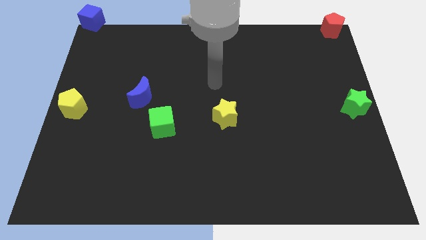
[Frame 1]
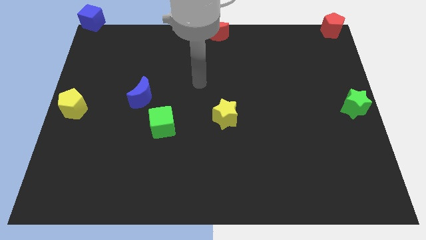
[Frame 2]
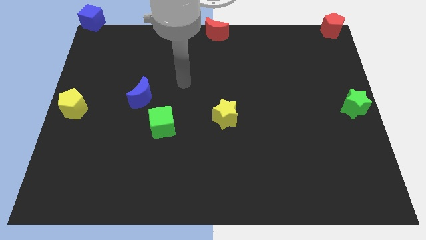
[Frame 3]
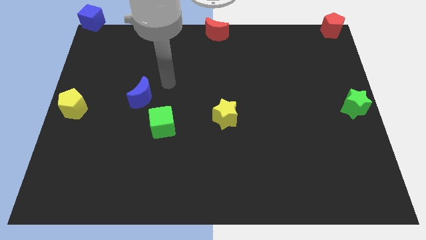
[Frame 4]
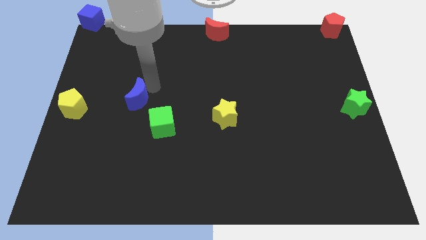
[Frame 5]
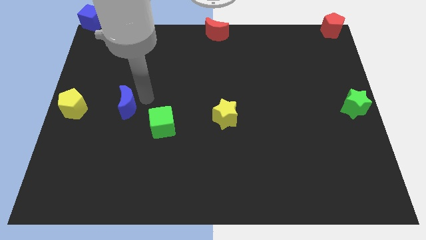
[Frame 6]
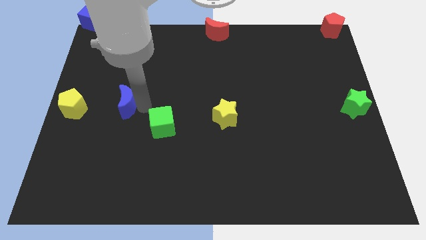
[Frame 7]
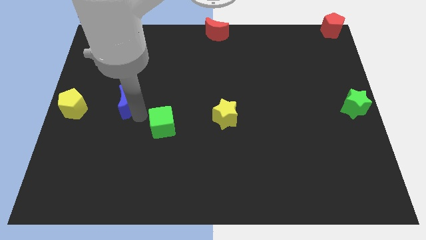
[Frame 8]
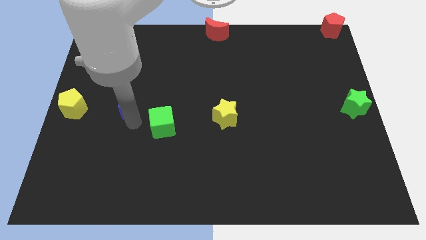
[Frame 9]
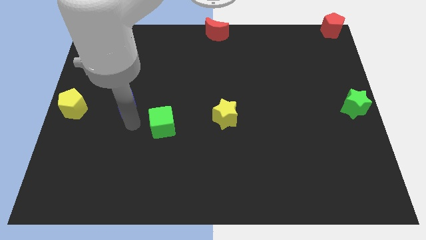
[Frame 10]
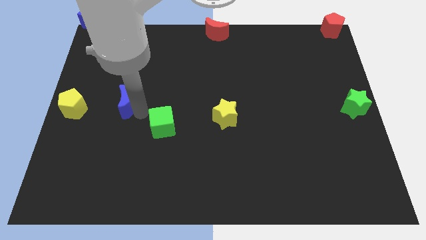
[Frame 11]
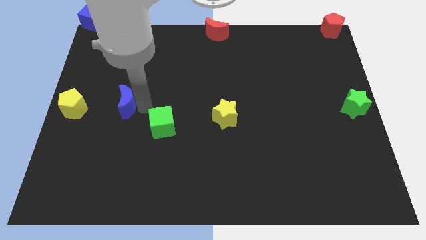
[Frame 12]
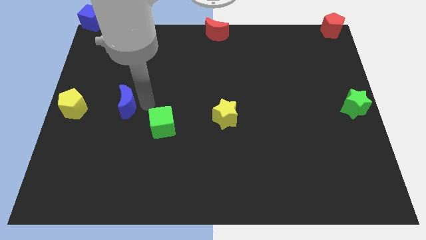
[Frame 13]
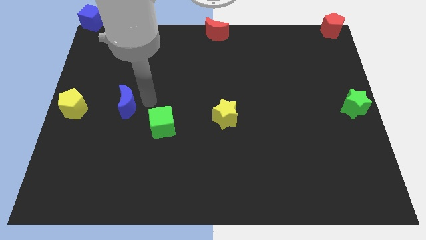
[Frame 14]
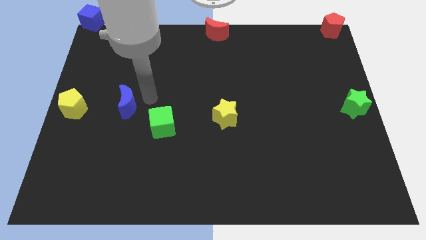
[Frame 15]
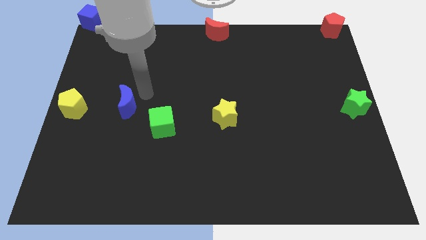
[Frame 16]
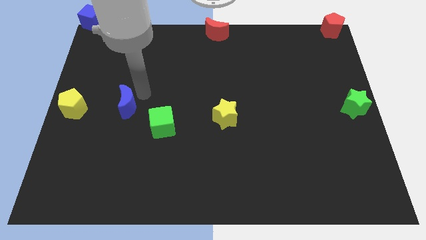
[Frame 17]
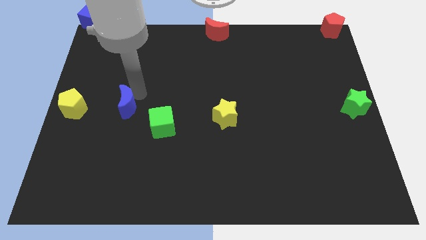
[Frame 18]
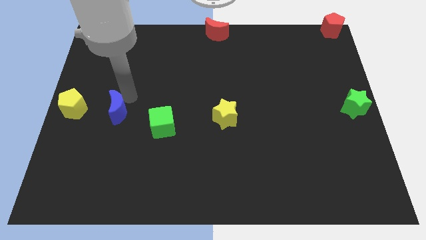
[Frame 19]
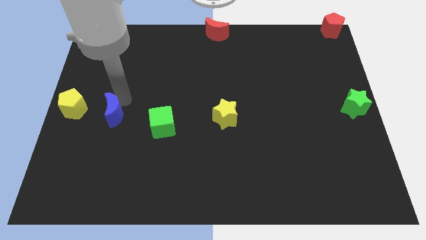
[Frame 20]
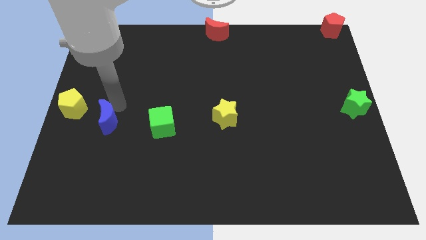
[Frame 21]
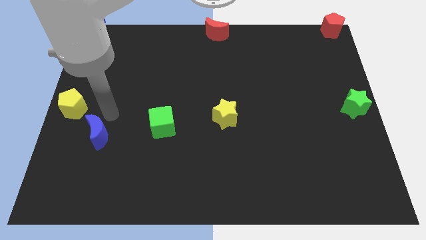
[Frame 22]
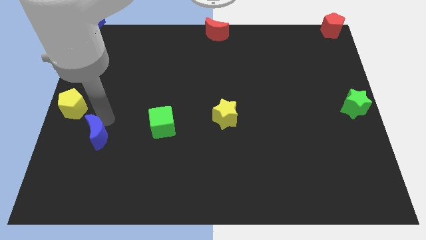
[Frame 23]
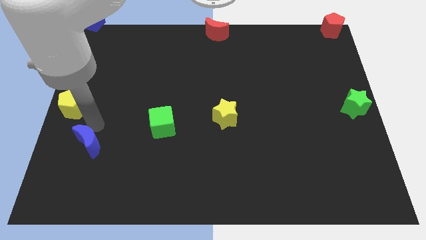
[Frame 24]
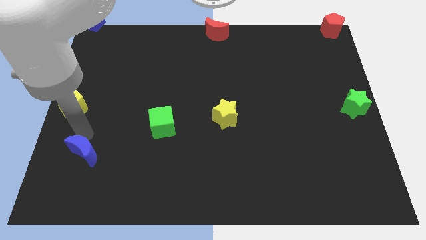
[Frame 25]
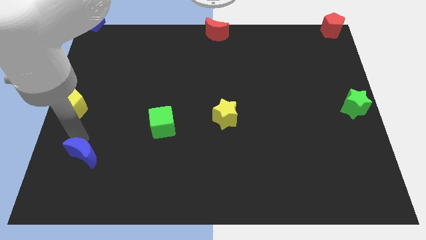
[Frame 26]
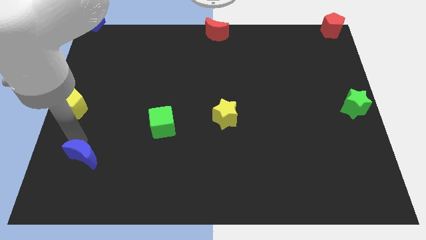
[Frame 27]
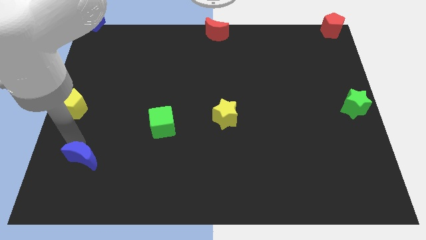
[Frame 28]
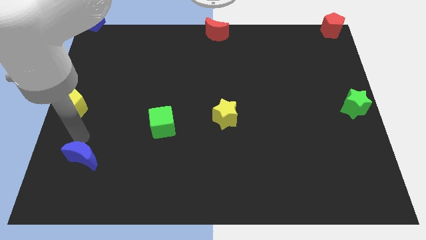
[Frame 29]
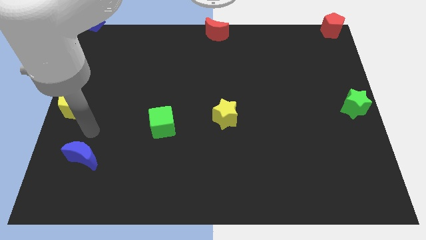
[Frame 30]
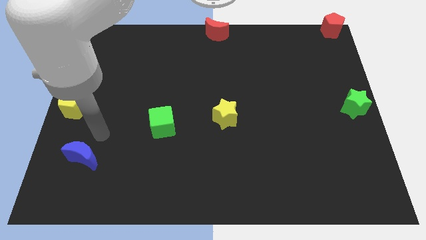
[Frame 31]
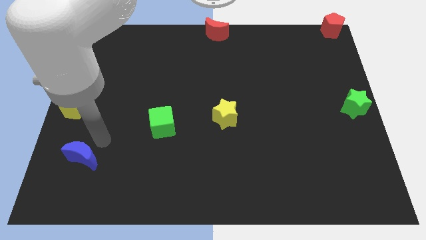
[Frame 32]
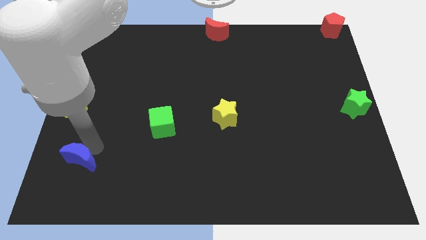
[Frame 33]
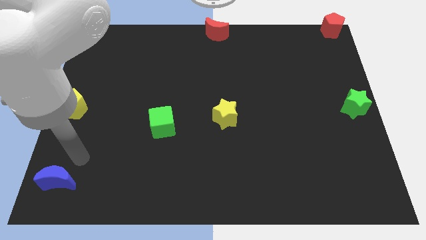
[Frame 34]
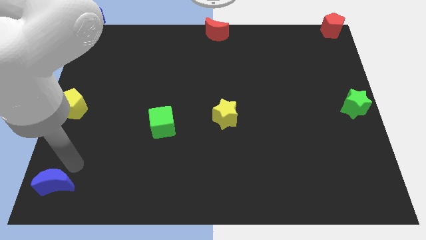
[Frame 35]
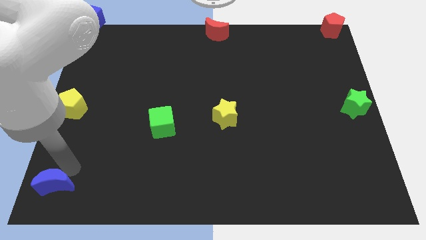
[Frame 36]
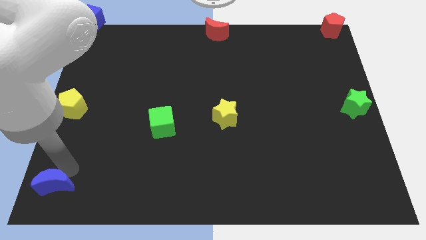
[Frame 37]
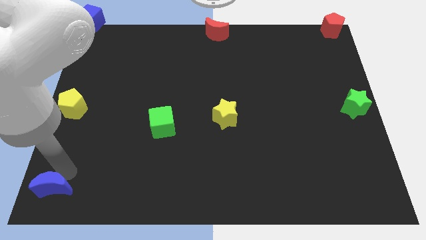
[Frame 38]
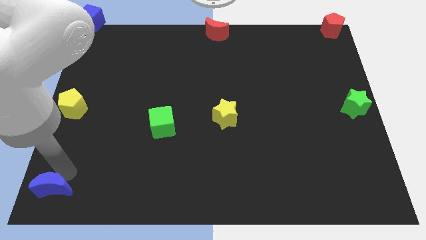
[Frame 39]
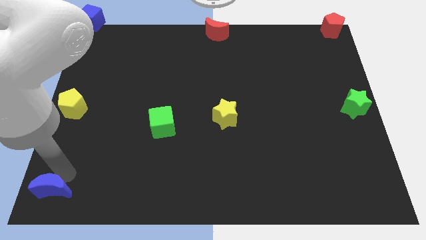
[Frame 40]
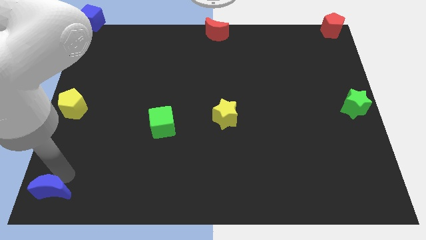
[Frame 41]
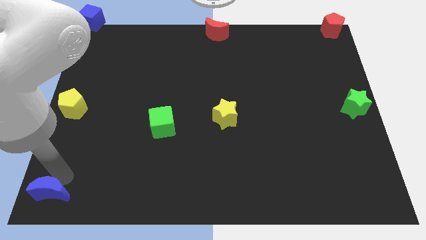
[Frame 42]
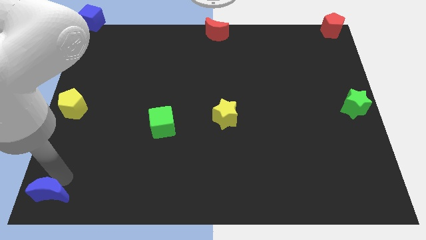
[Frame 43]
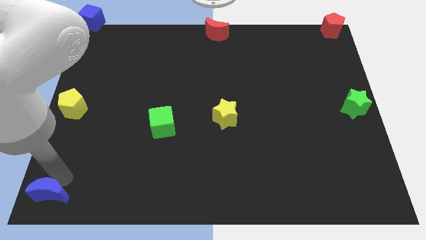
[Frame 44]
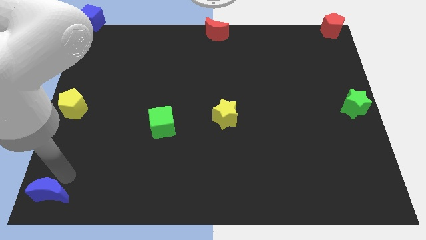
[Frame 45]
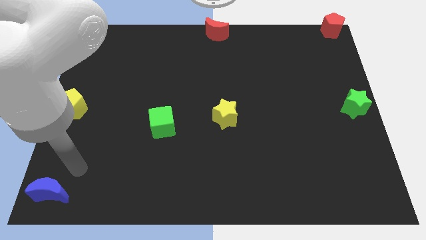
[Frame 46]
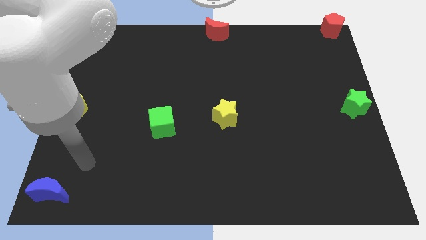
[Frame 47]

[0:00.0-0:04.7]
push the blue moon to the bottom left corner of the board

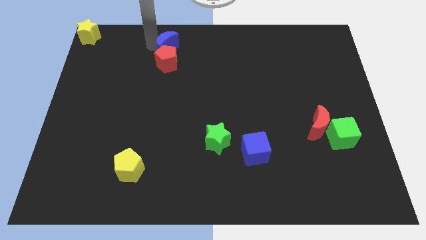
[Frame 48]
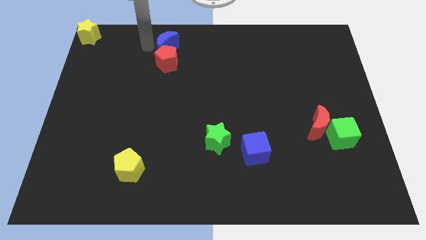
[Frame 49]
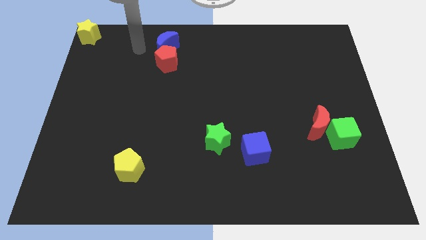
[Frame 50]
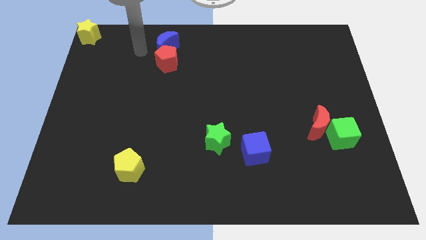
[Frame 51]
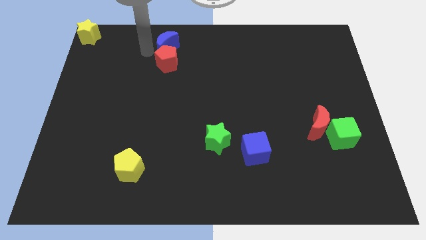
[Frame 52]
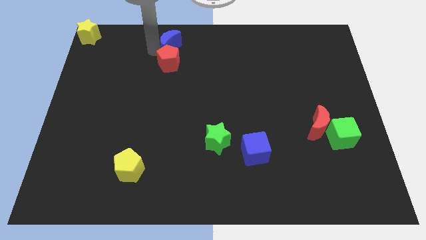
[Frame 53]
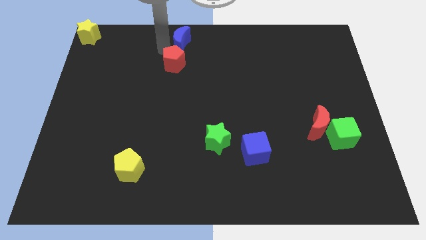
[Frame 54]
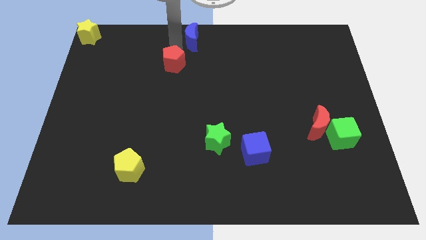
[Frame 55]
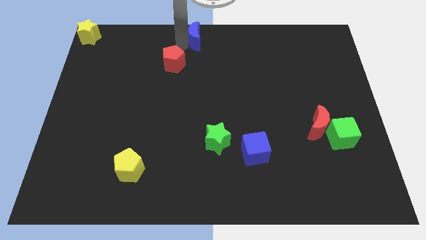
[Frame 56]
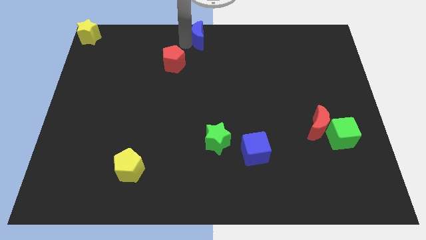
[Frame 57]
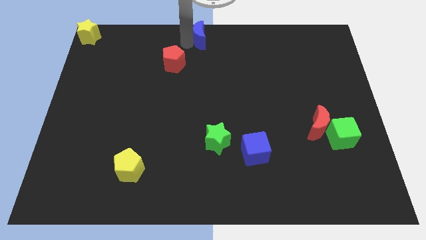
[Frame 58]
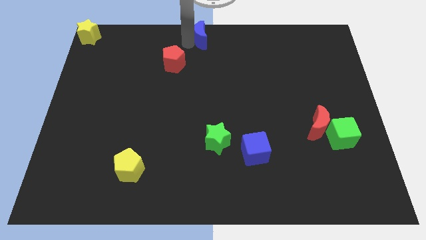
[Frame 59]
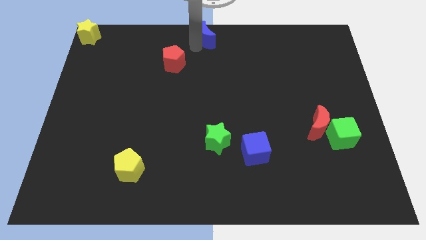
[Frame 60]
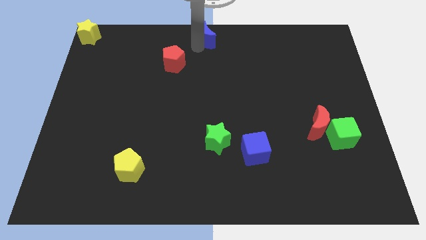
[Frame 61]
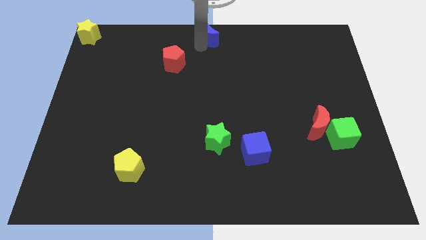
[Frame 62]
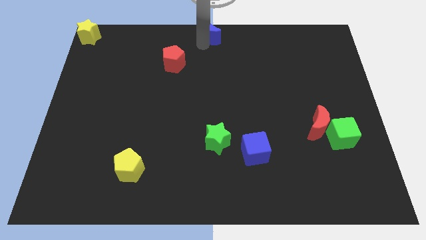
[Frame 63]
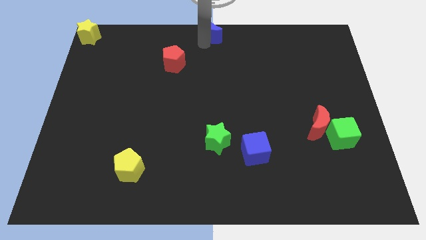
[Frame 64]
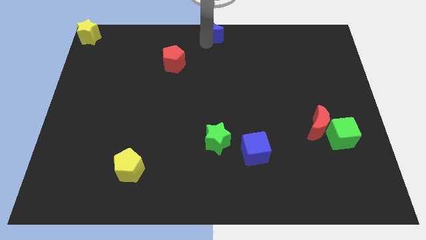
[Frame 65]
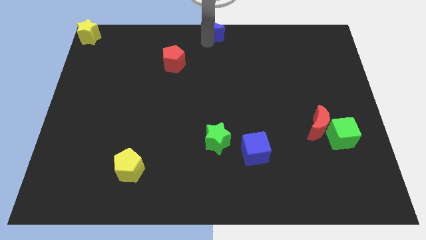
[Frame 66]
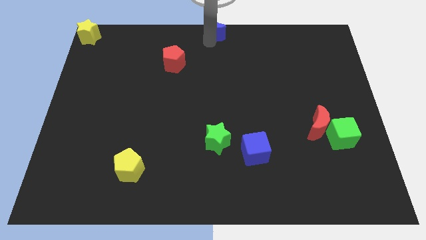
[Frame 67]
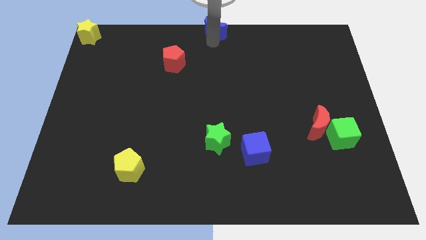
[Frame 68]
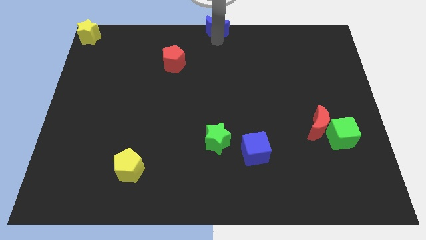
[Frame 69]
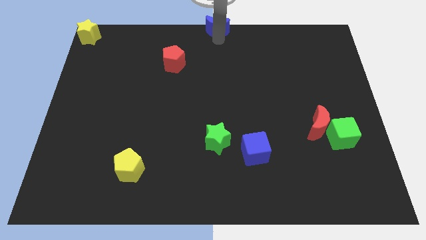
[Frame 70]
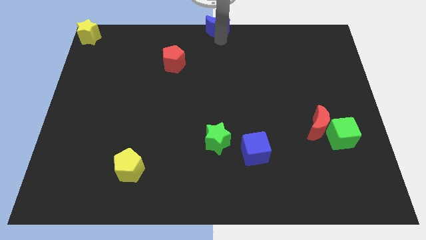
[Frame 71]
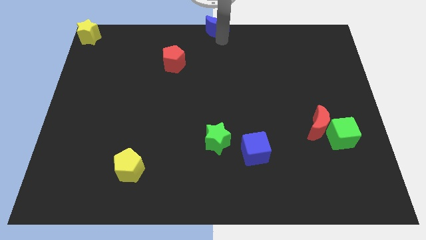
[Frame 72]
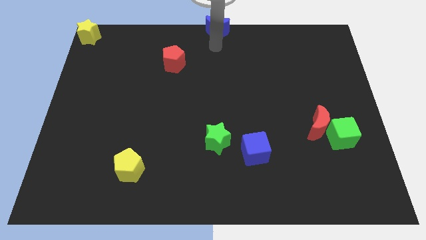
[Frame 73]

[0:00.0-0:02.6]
push the blue moon to the top center

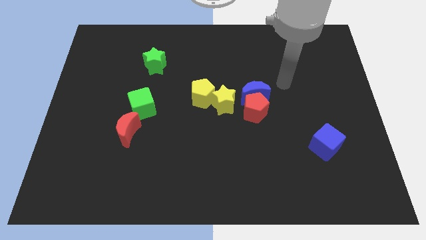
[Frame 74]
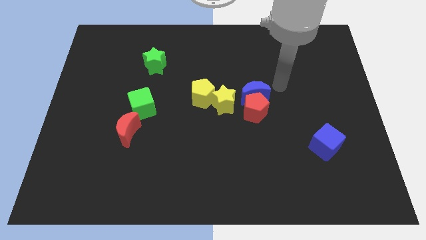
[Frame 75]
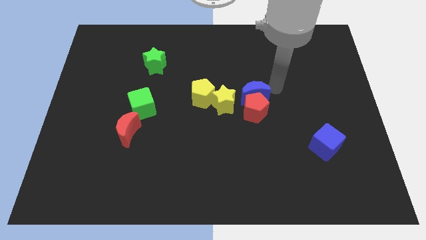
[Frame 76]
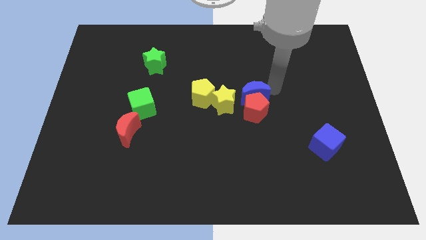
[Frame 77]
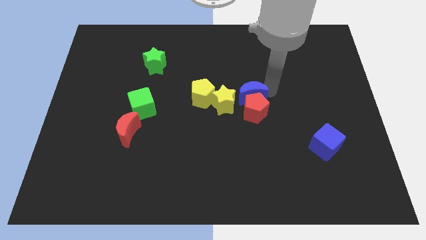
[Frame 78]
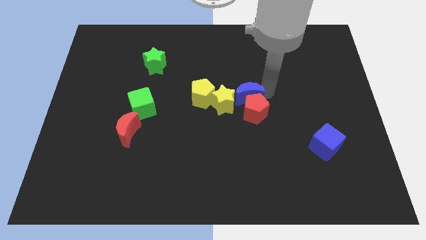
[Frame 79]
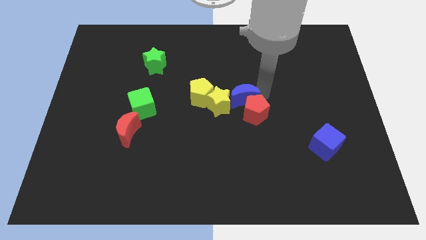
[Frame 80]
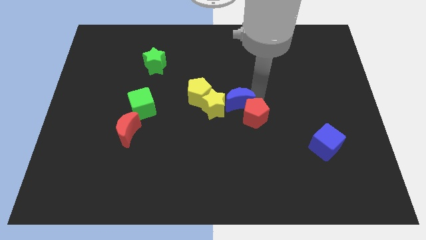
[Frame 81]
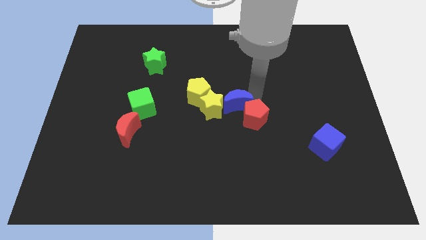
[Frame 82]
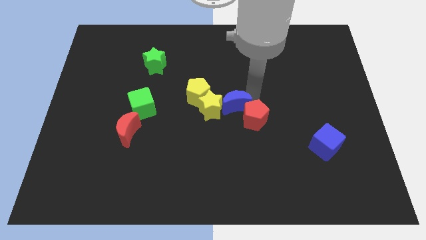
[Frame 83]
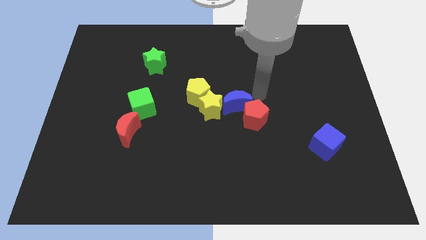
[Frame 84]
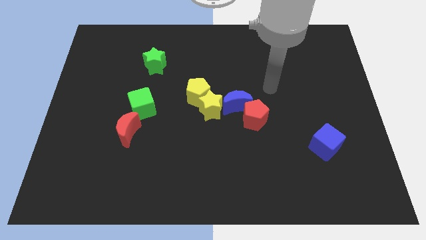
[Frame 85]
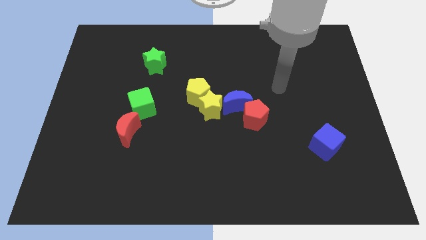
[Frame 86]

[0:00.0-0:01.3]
place the blue moon in between the yellow star and the red pentagon

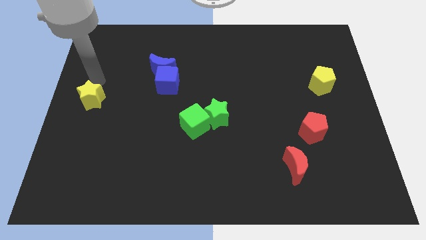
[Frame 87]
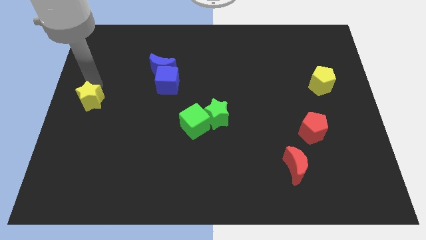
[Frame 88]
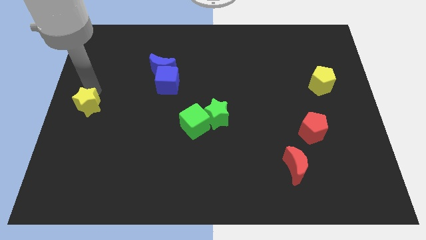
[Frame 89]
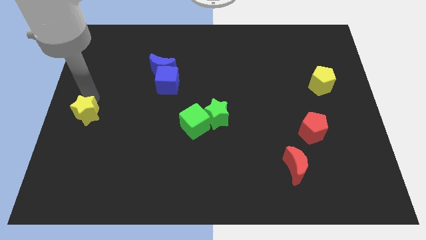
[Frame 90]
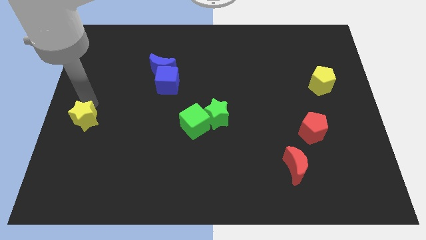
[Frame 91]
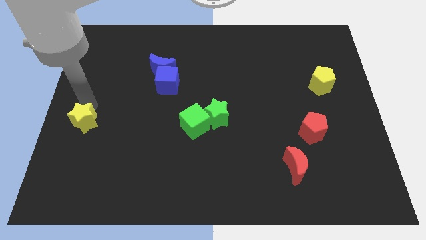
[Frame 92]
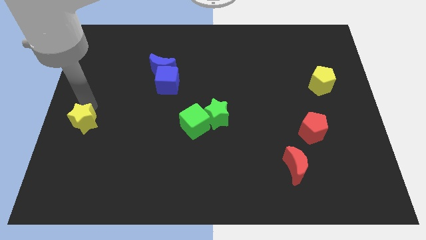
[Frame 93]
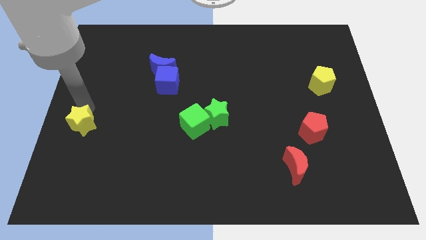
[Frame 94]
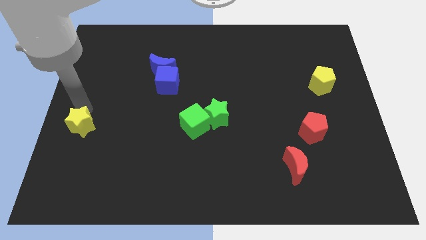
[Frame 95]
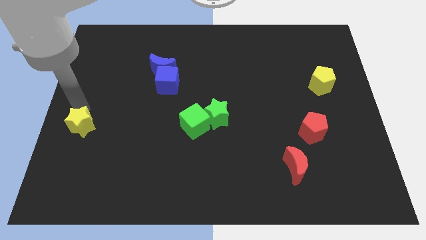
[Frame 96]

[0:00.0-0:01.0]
push the yellow star slightly downwards
